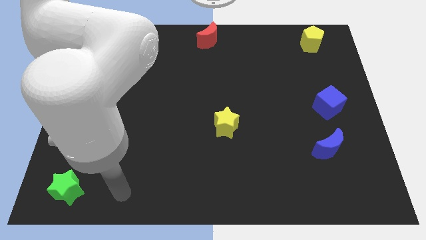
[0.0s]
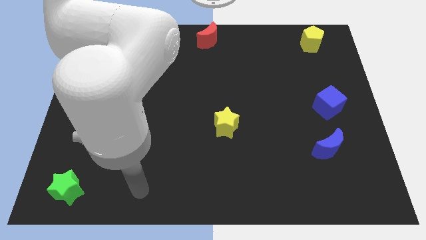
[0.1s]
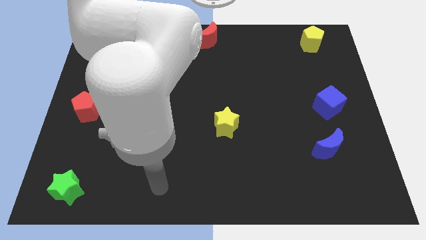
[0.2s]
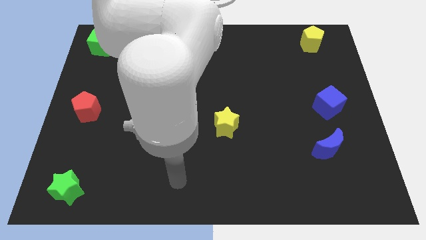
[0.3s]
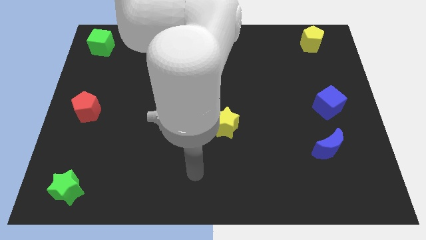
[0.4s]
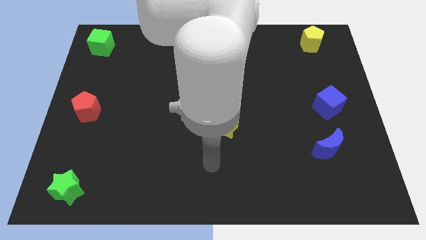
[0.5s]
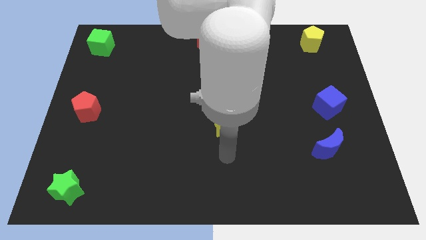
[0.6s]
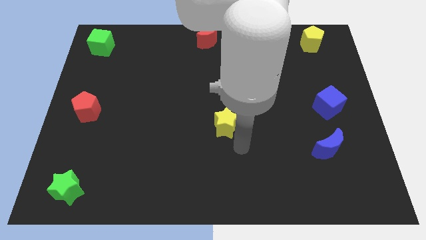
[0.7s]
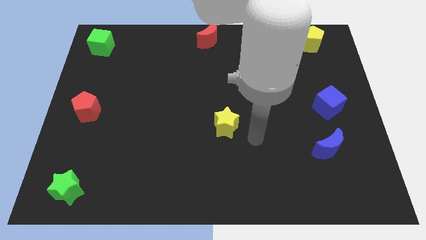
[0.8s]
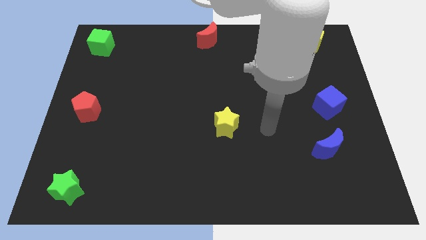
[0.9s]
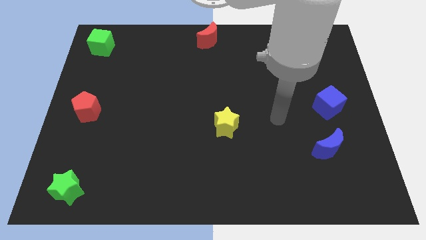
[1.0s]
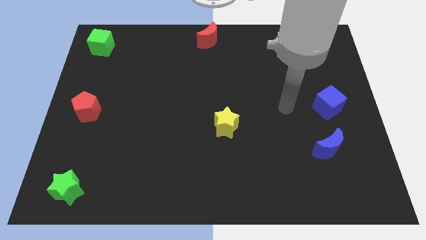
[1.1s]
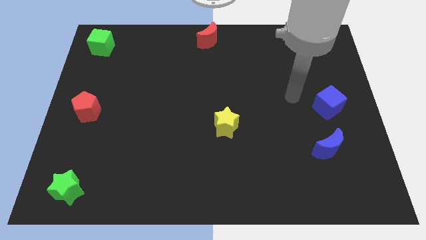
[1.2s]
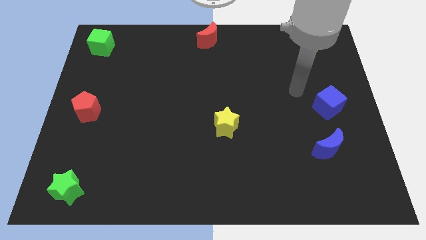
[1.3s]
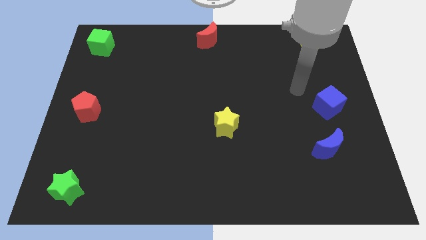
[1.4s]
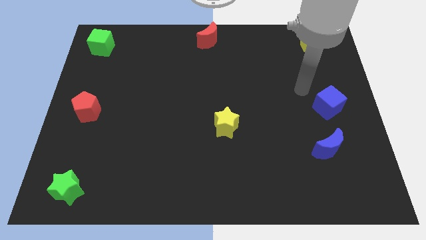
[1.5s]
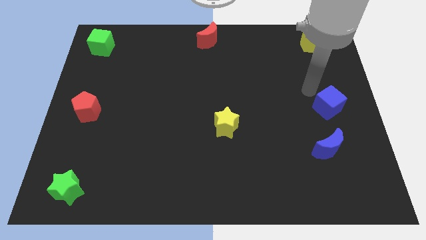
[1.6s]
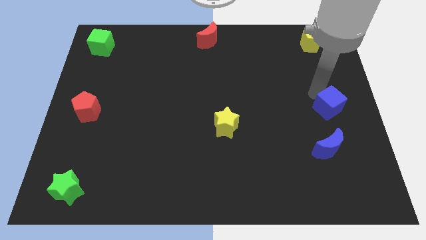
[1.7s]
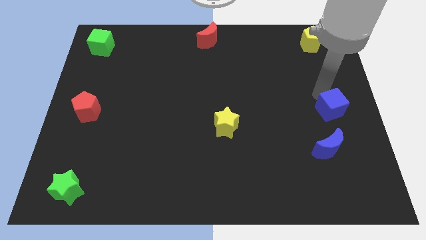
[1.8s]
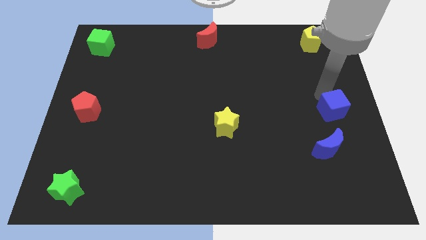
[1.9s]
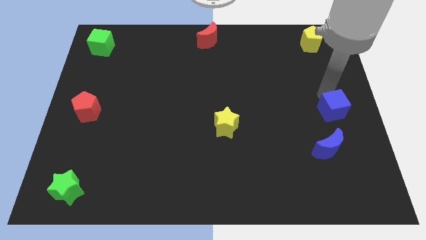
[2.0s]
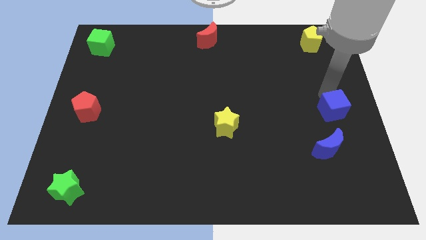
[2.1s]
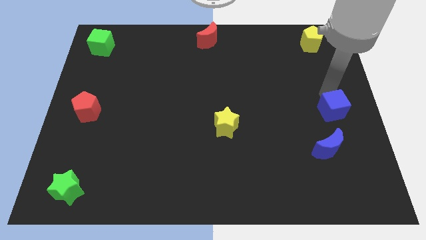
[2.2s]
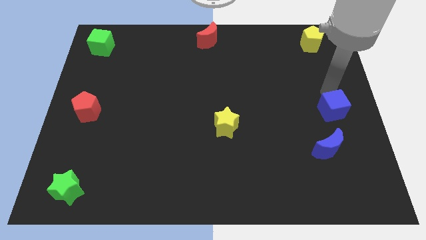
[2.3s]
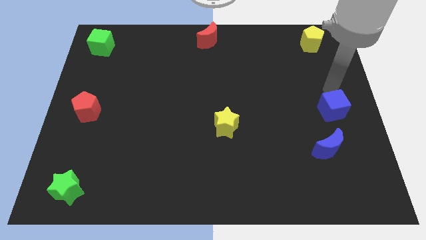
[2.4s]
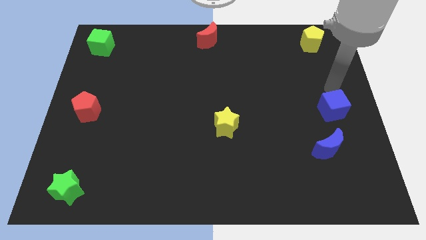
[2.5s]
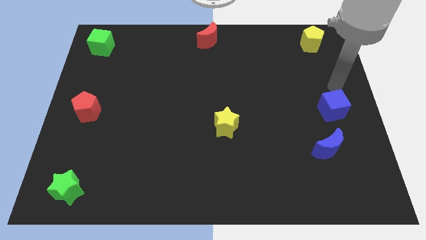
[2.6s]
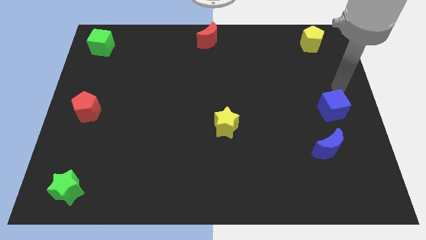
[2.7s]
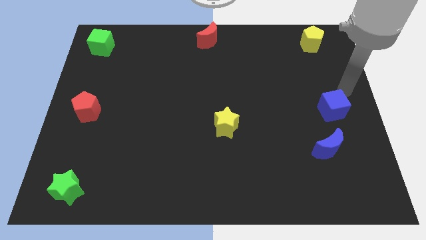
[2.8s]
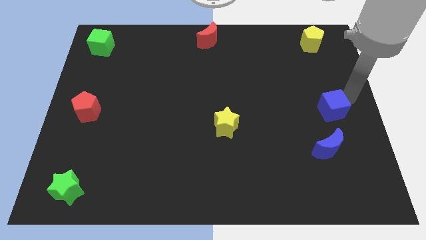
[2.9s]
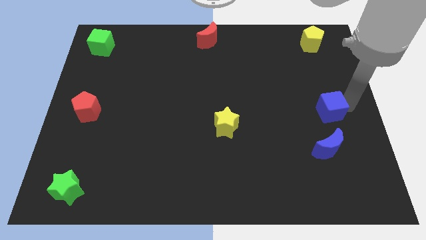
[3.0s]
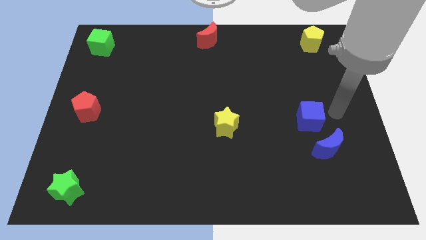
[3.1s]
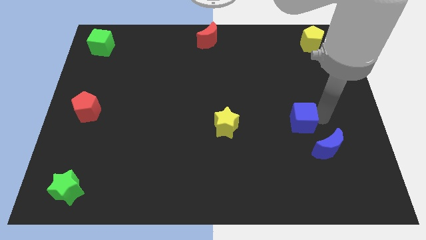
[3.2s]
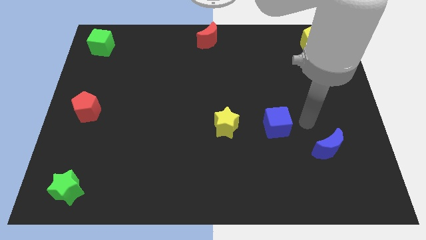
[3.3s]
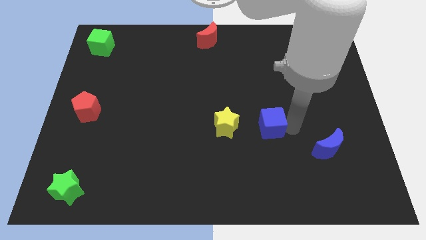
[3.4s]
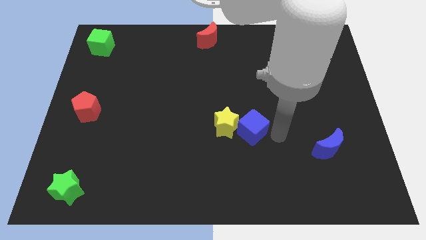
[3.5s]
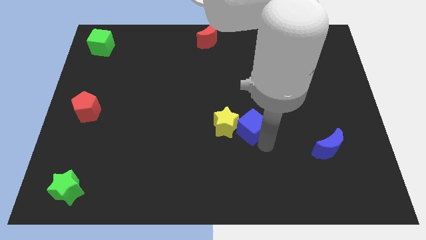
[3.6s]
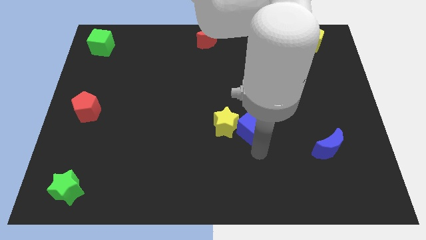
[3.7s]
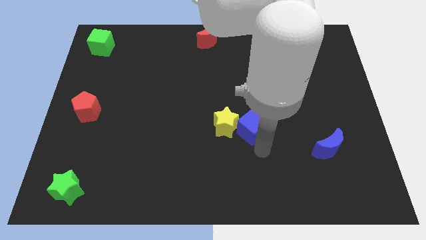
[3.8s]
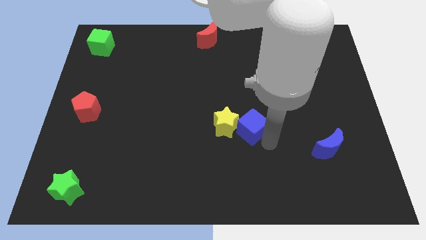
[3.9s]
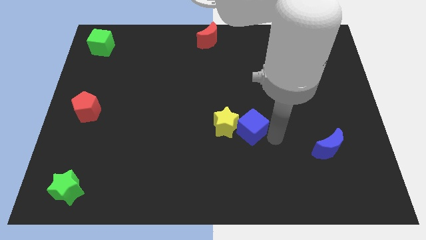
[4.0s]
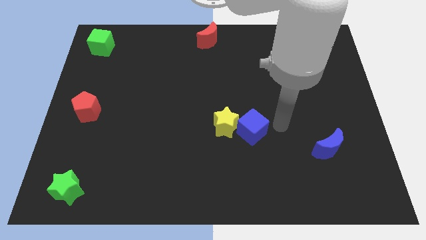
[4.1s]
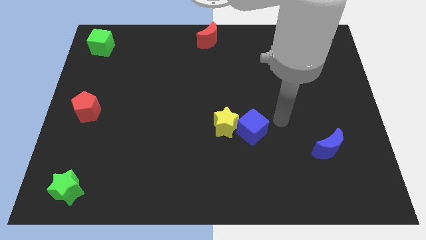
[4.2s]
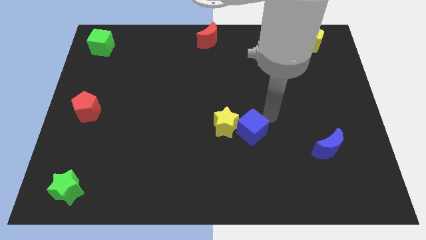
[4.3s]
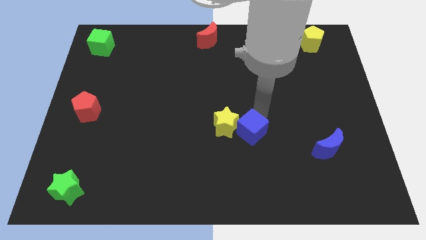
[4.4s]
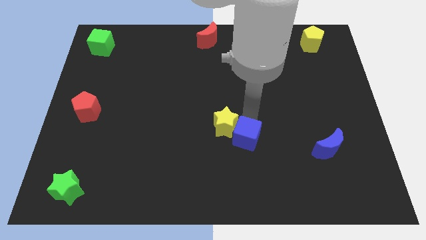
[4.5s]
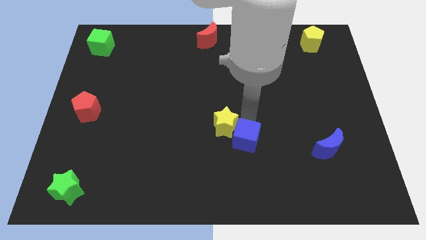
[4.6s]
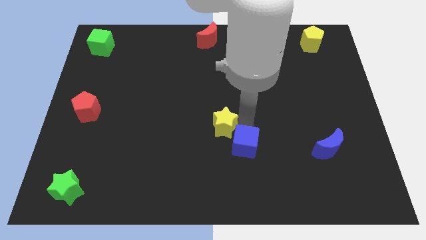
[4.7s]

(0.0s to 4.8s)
push the blue cube into the yellow star

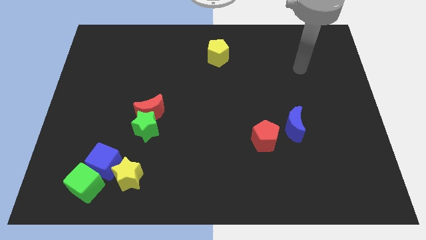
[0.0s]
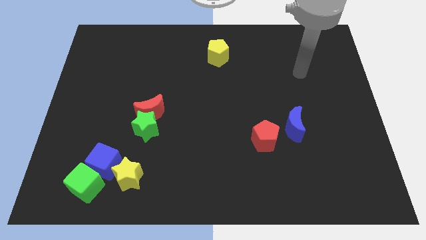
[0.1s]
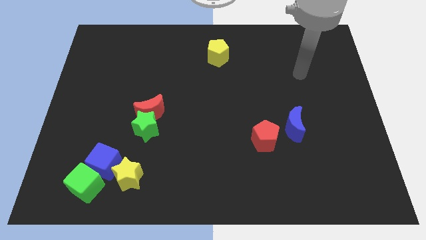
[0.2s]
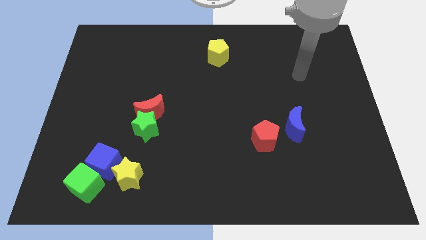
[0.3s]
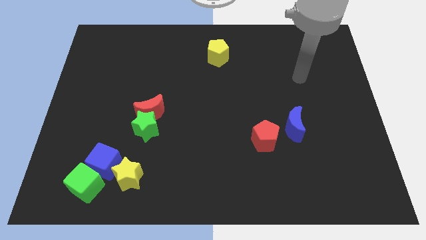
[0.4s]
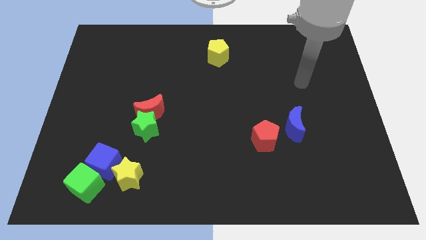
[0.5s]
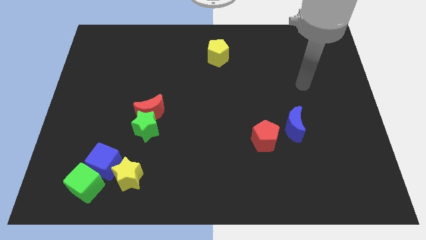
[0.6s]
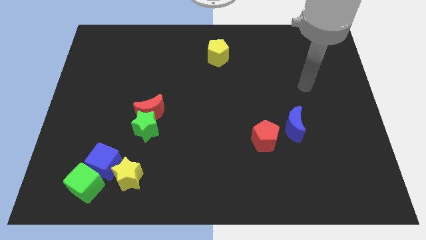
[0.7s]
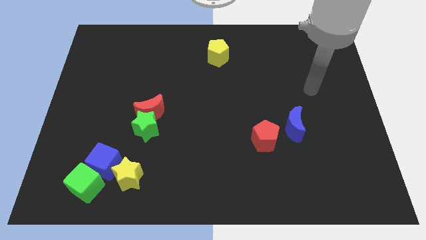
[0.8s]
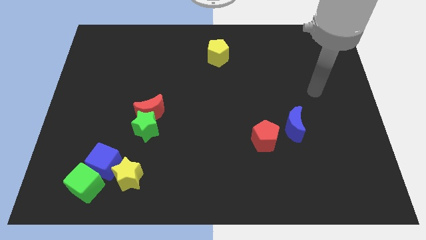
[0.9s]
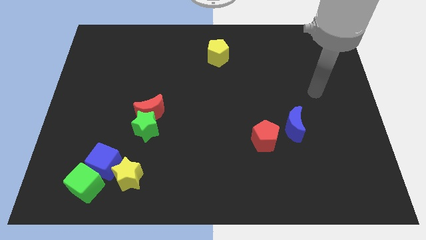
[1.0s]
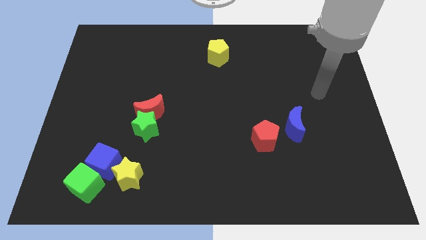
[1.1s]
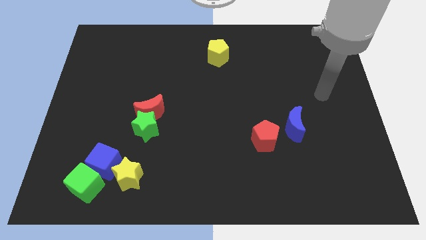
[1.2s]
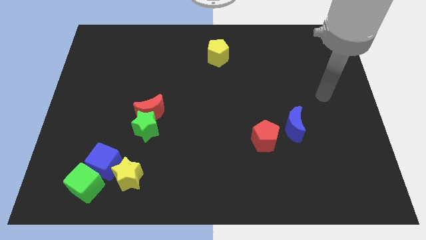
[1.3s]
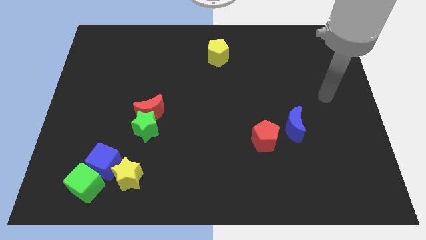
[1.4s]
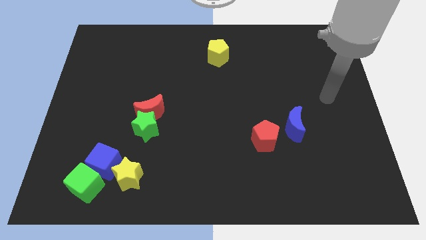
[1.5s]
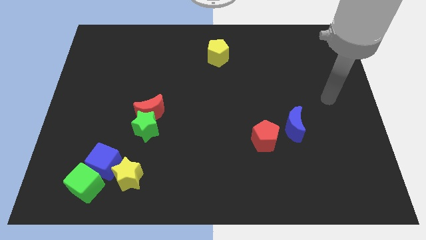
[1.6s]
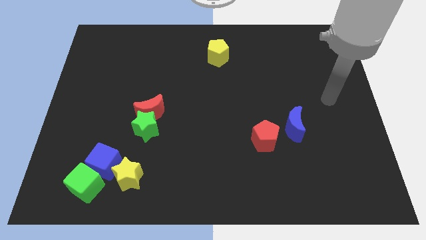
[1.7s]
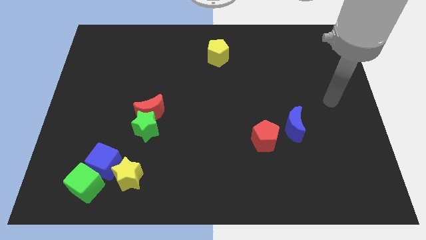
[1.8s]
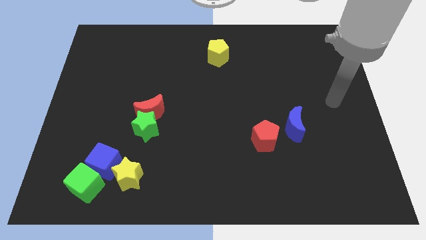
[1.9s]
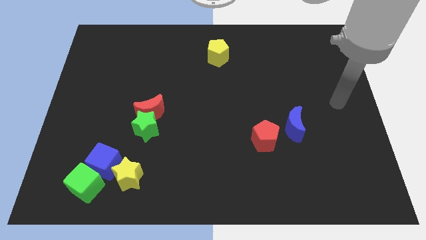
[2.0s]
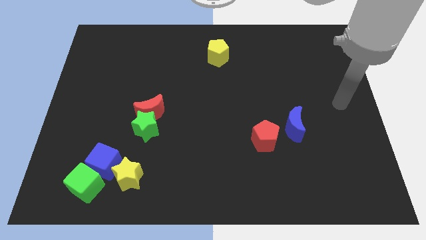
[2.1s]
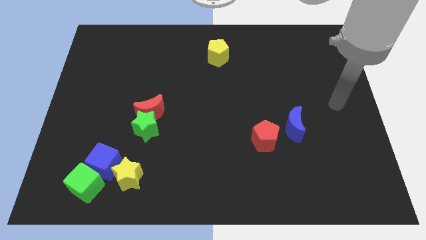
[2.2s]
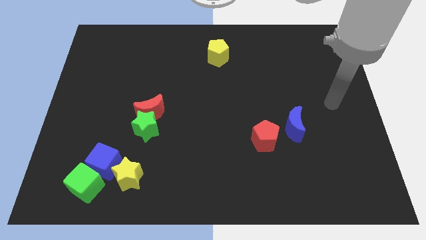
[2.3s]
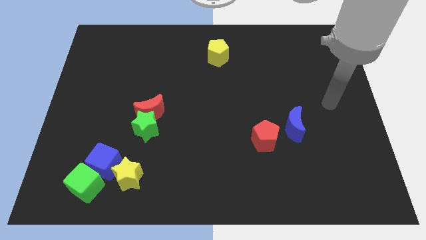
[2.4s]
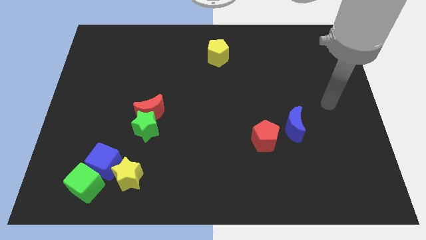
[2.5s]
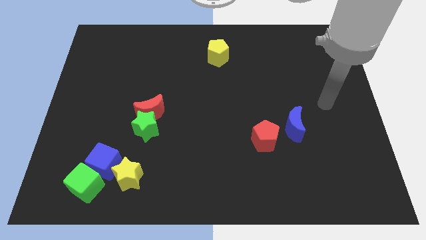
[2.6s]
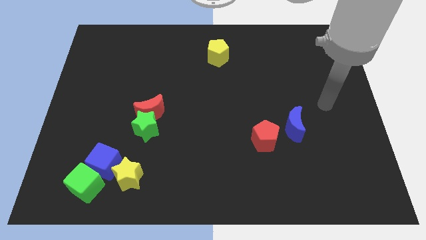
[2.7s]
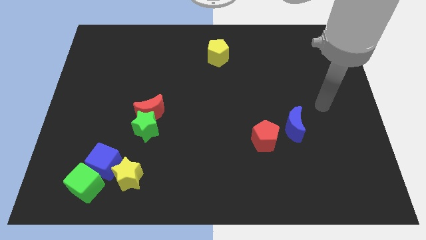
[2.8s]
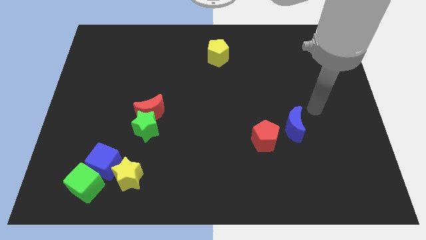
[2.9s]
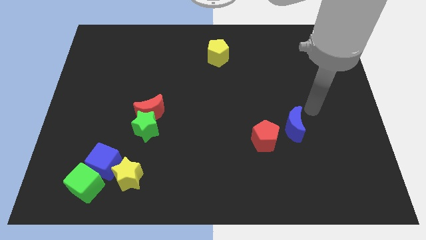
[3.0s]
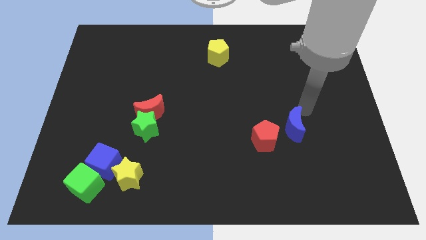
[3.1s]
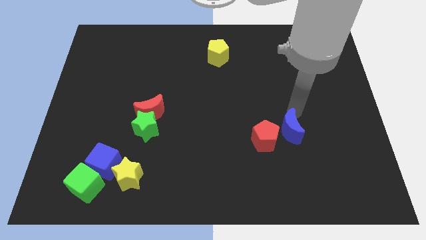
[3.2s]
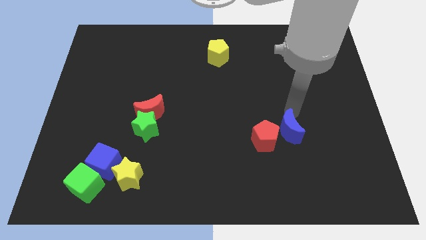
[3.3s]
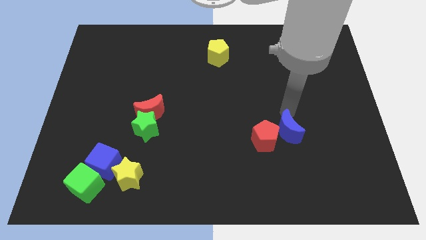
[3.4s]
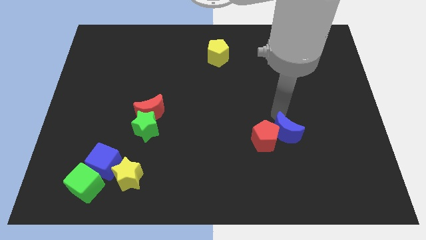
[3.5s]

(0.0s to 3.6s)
move the blue moon slightly to the left

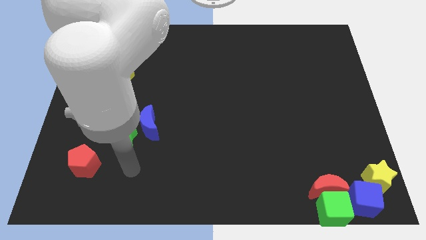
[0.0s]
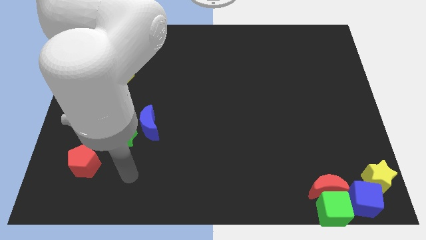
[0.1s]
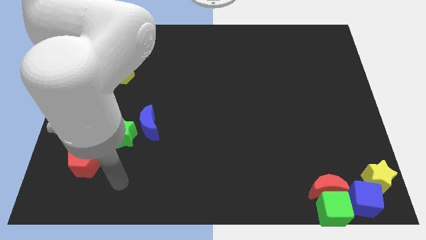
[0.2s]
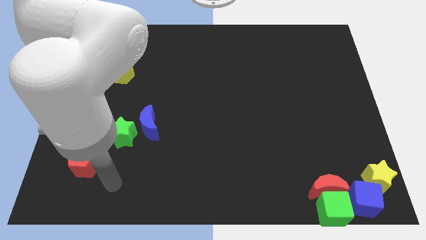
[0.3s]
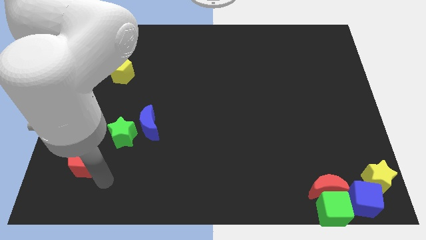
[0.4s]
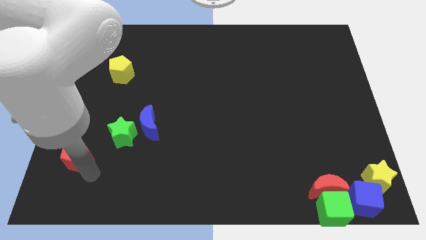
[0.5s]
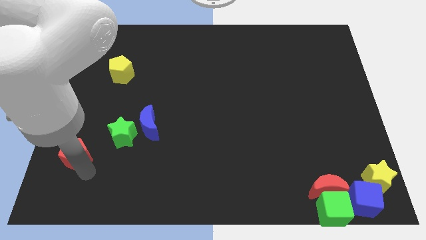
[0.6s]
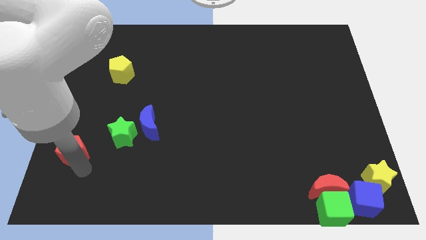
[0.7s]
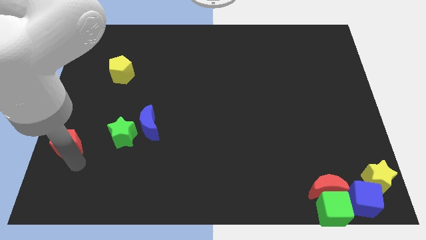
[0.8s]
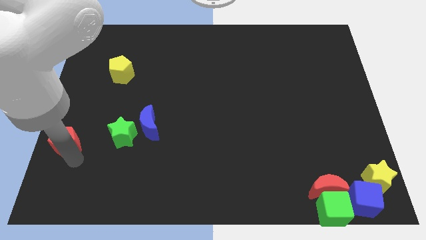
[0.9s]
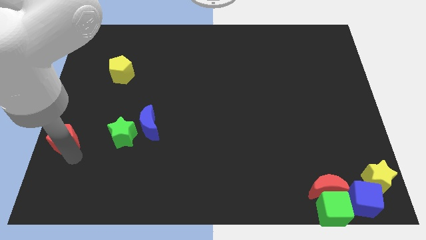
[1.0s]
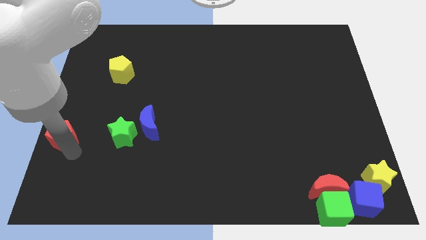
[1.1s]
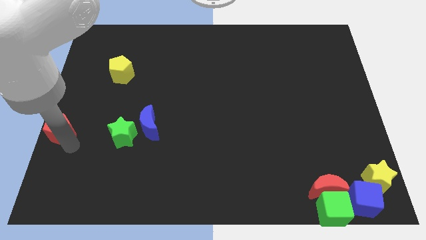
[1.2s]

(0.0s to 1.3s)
move the red pentagon to the left of the green star
